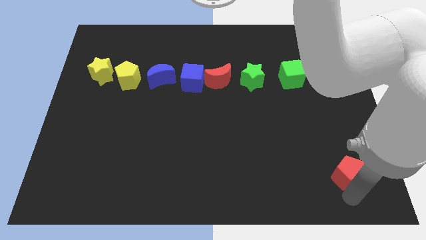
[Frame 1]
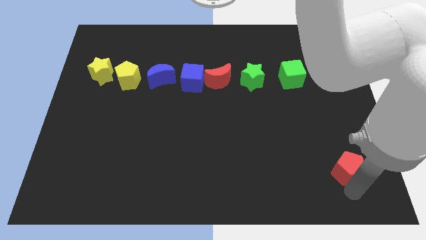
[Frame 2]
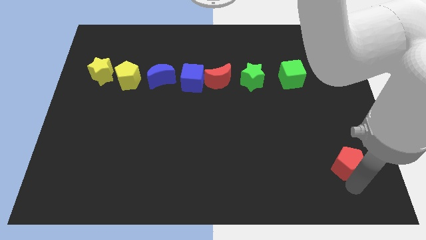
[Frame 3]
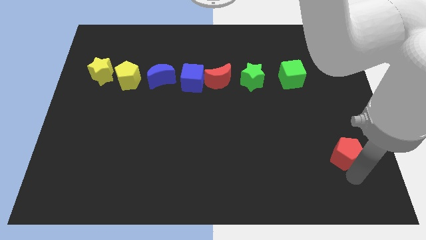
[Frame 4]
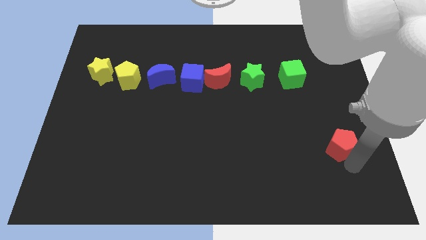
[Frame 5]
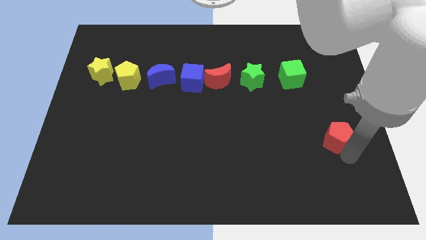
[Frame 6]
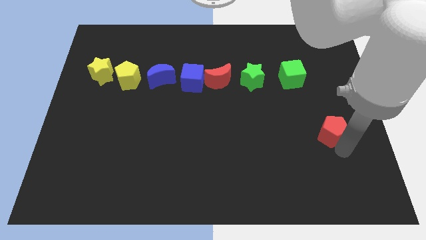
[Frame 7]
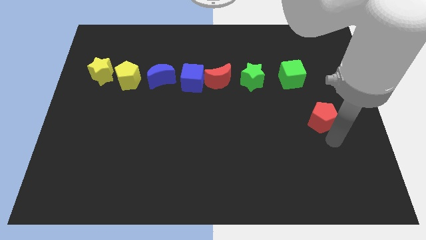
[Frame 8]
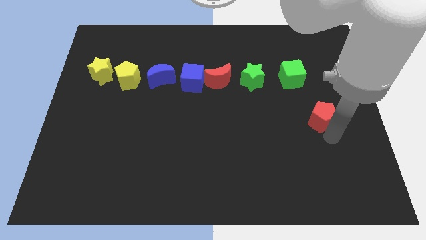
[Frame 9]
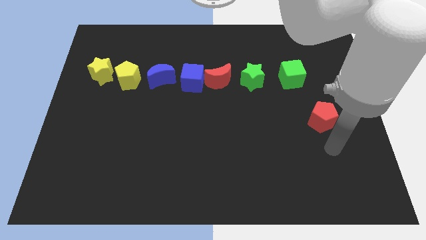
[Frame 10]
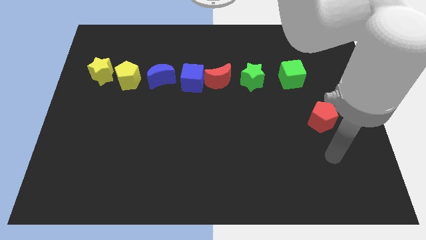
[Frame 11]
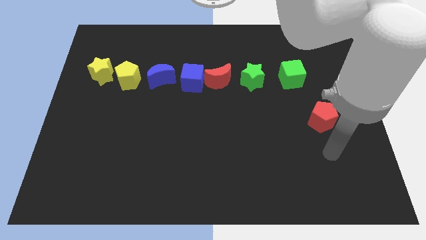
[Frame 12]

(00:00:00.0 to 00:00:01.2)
push the red pentagon to center right

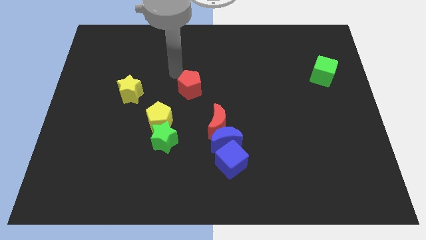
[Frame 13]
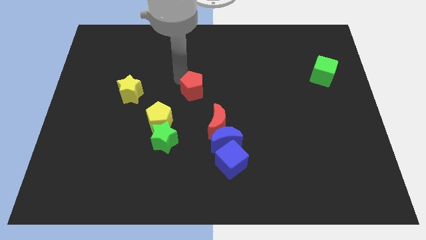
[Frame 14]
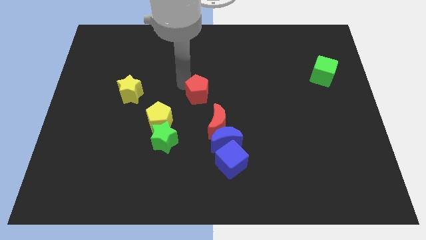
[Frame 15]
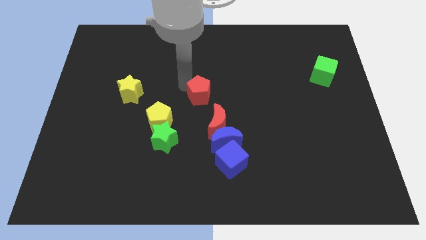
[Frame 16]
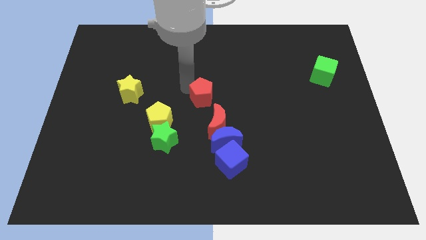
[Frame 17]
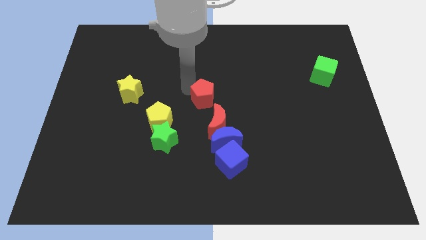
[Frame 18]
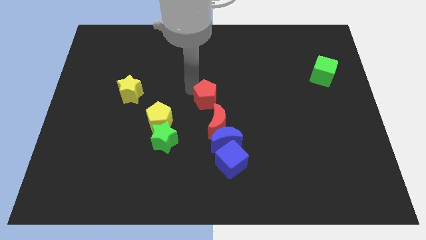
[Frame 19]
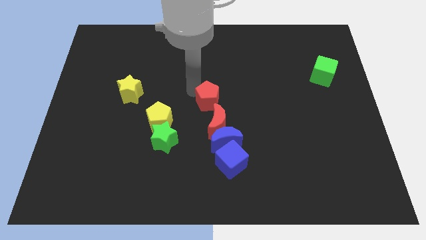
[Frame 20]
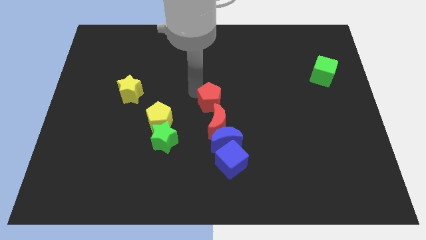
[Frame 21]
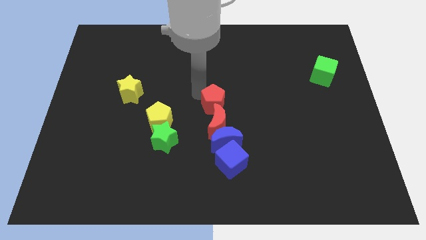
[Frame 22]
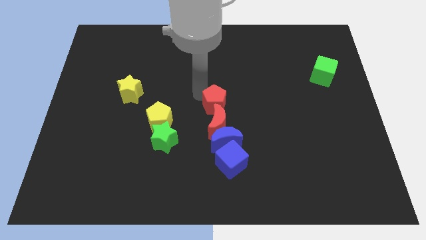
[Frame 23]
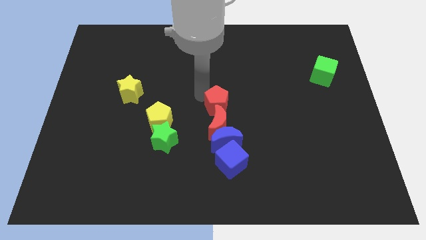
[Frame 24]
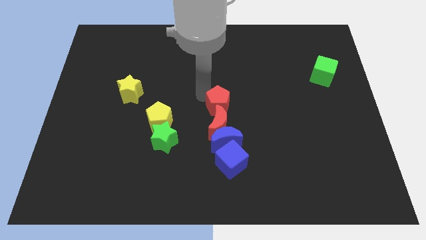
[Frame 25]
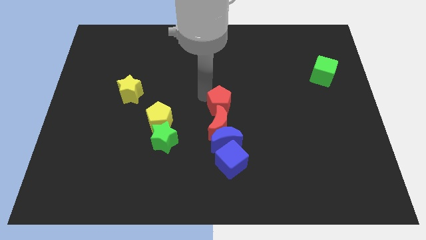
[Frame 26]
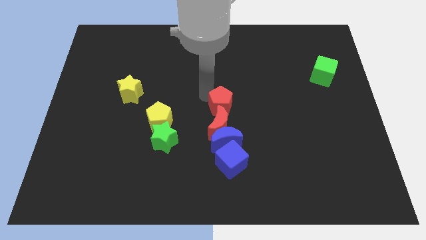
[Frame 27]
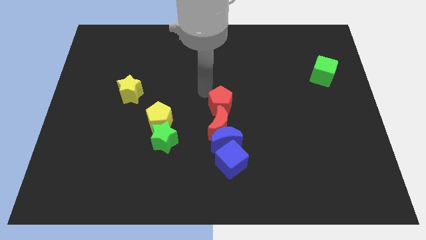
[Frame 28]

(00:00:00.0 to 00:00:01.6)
move the red pentagon to the top side of the red crescent

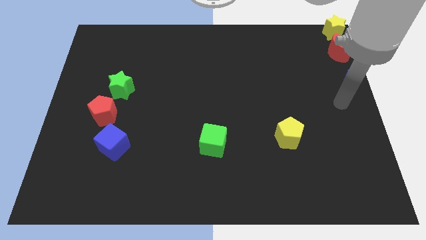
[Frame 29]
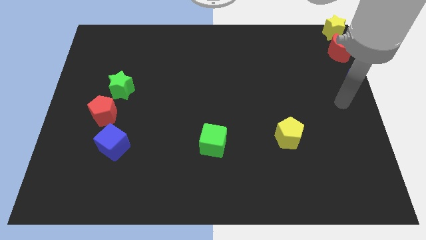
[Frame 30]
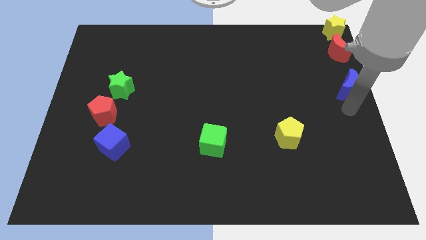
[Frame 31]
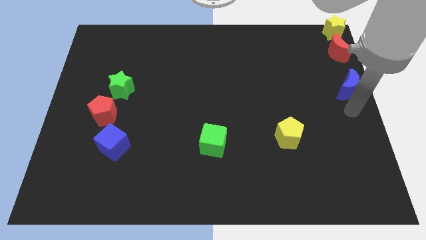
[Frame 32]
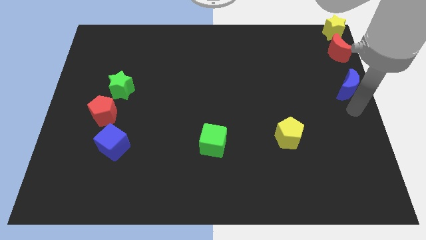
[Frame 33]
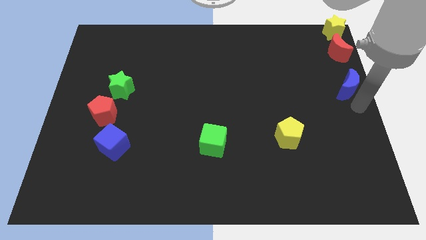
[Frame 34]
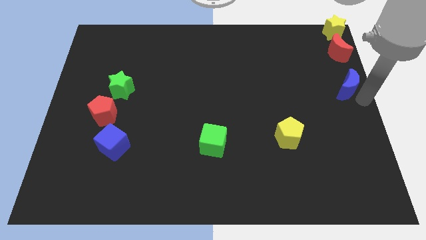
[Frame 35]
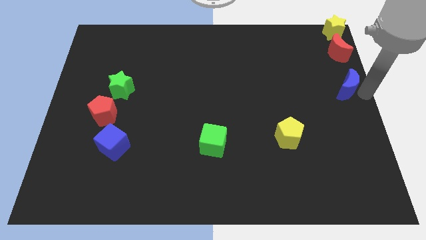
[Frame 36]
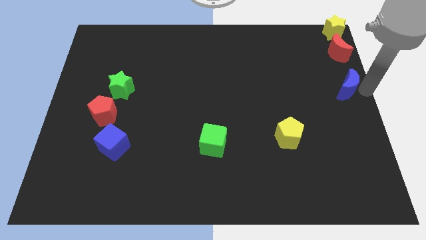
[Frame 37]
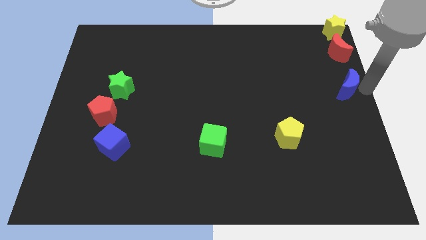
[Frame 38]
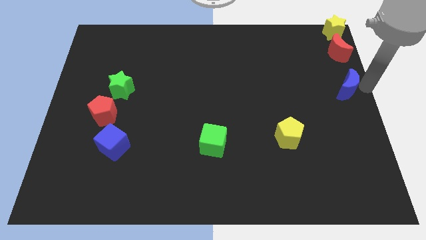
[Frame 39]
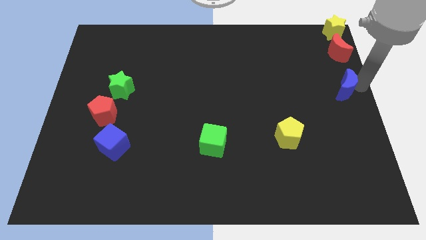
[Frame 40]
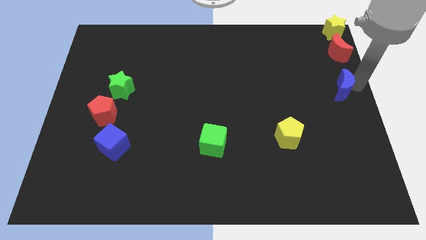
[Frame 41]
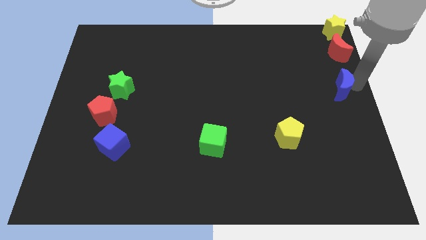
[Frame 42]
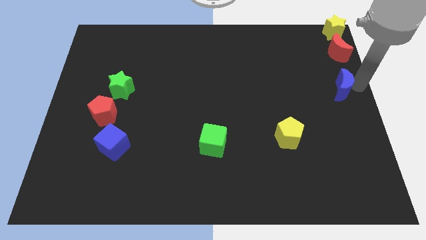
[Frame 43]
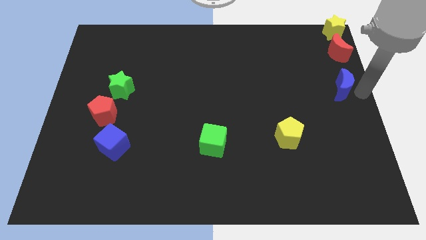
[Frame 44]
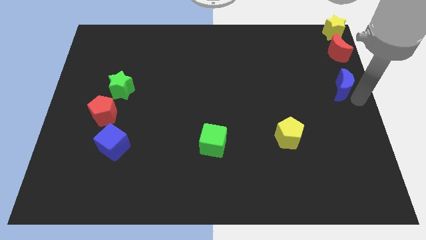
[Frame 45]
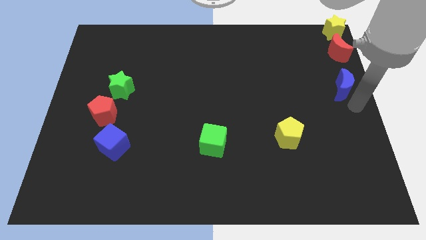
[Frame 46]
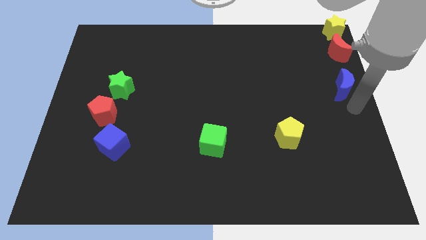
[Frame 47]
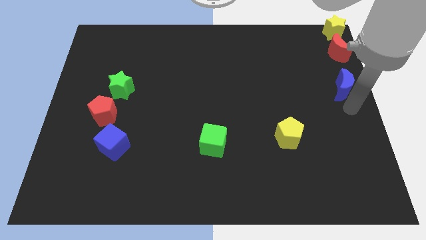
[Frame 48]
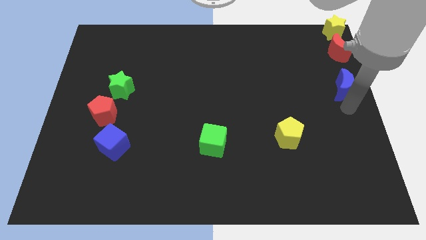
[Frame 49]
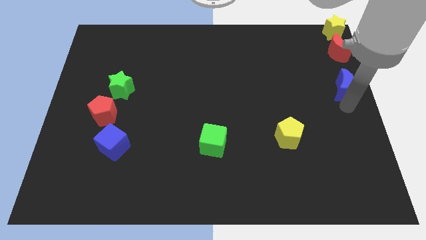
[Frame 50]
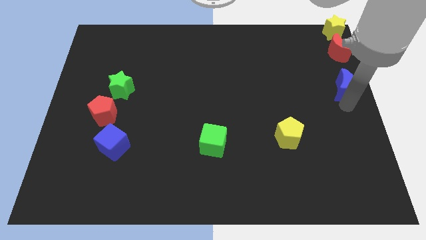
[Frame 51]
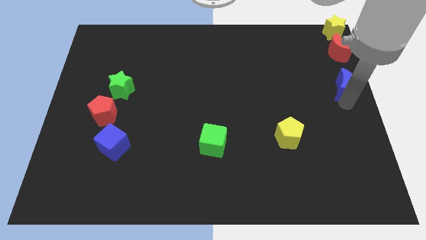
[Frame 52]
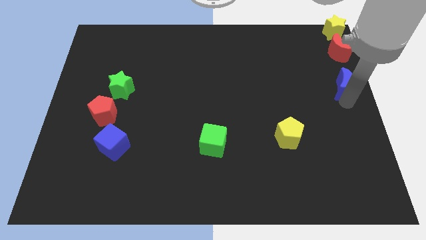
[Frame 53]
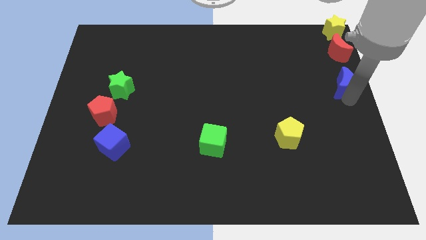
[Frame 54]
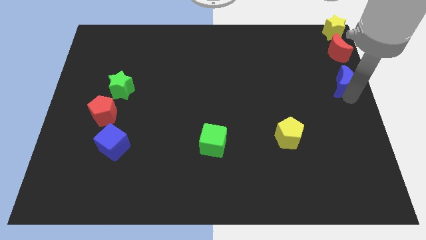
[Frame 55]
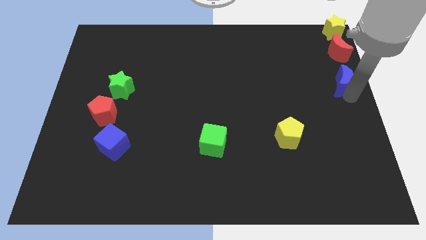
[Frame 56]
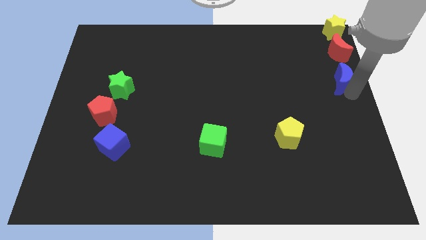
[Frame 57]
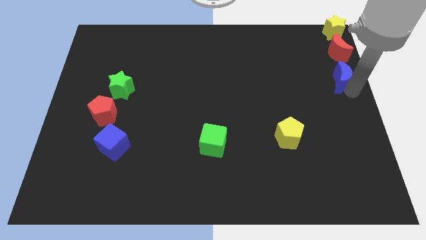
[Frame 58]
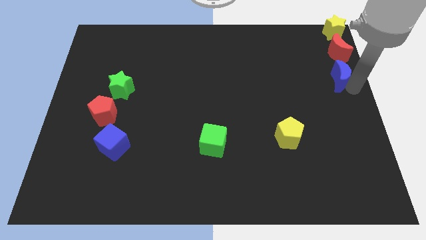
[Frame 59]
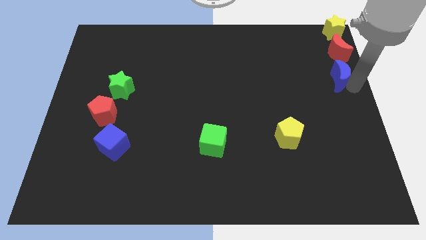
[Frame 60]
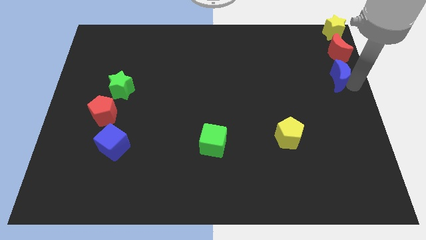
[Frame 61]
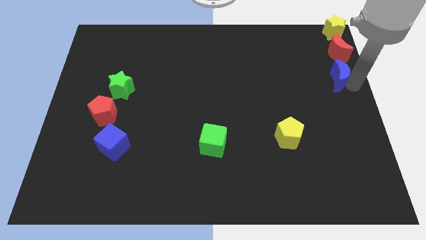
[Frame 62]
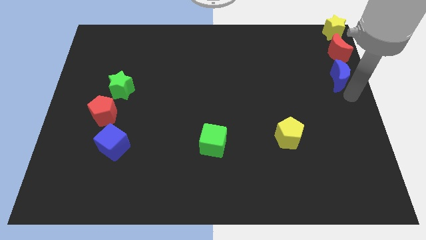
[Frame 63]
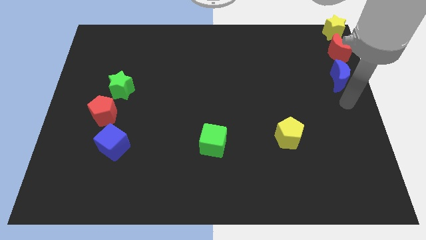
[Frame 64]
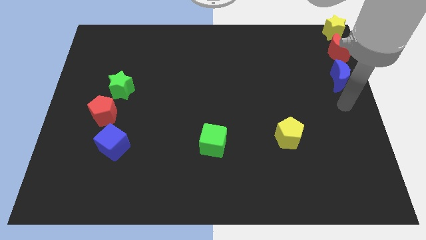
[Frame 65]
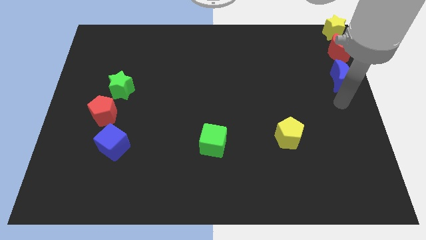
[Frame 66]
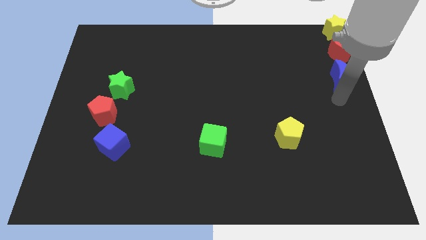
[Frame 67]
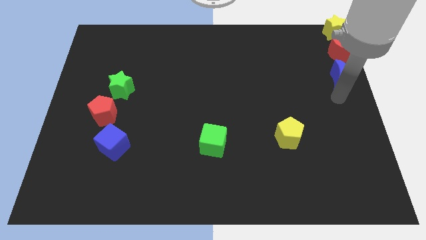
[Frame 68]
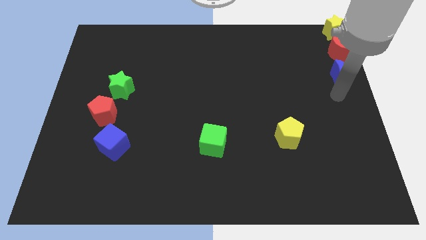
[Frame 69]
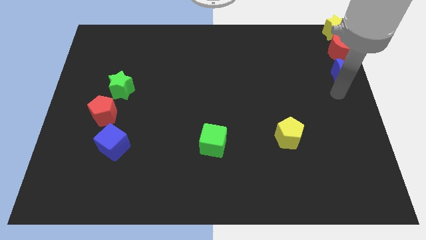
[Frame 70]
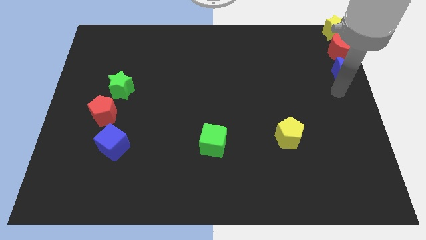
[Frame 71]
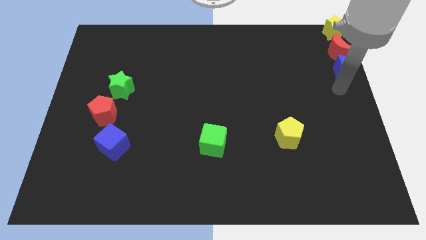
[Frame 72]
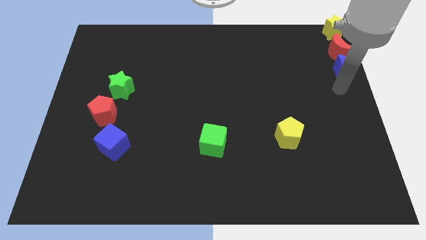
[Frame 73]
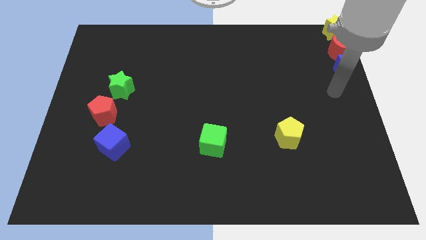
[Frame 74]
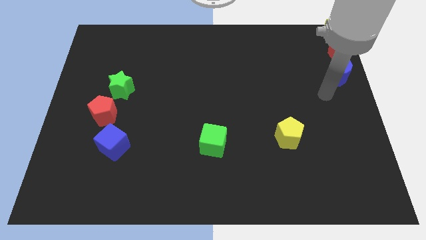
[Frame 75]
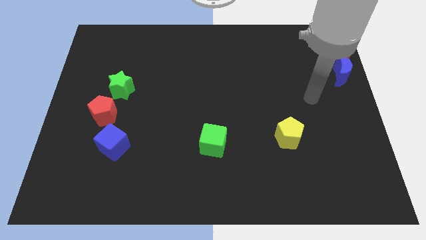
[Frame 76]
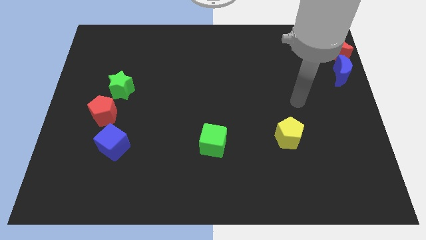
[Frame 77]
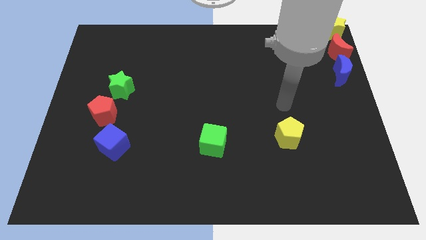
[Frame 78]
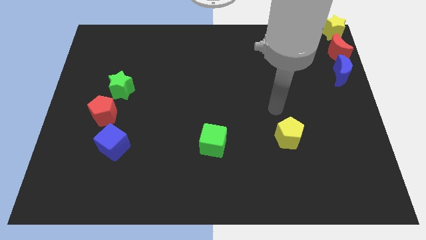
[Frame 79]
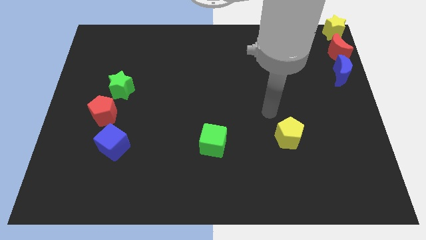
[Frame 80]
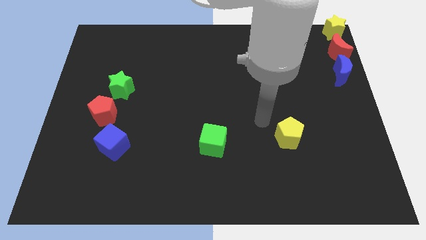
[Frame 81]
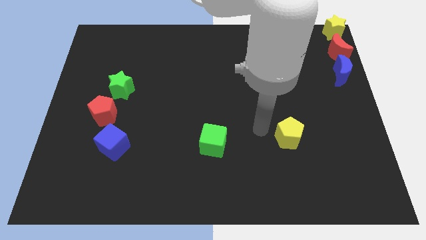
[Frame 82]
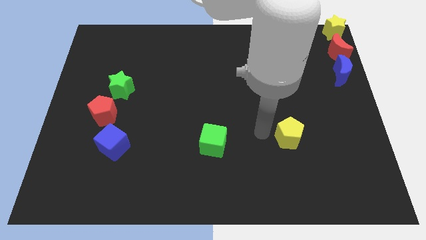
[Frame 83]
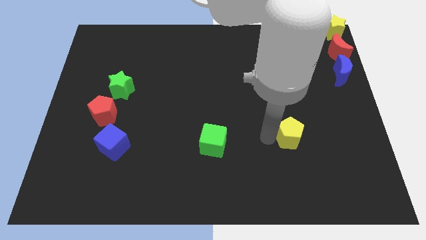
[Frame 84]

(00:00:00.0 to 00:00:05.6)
attach the blue moon to the red moon

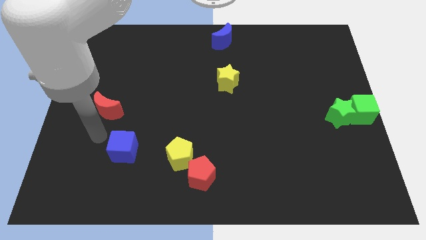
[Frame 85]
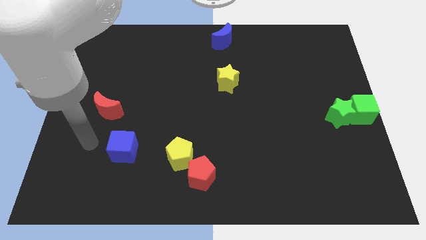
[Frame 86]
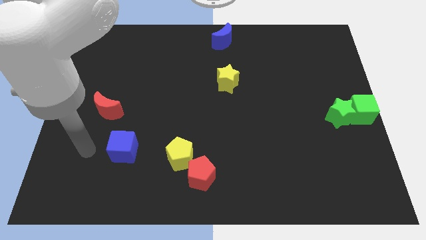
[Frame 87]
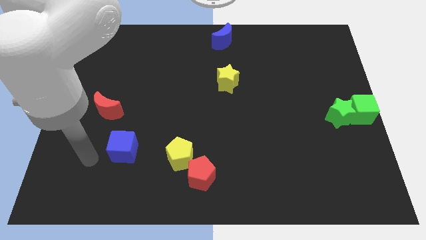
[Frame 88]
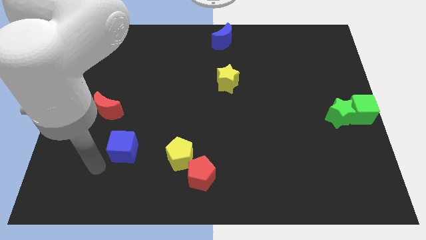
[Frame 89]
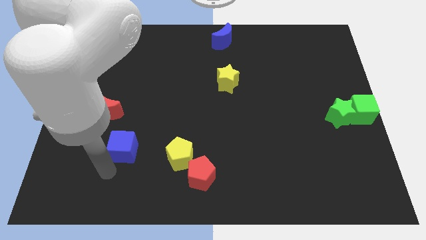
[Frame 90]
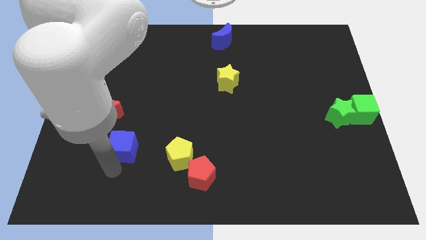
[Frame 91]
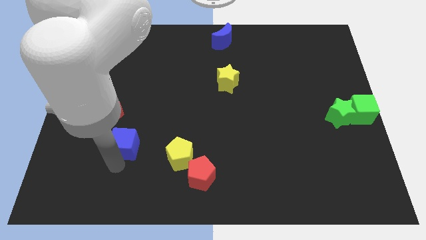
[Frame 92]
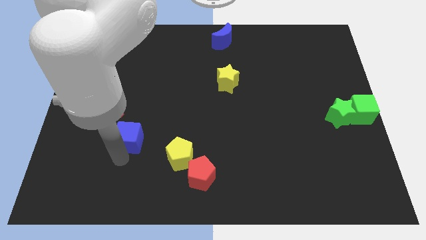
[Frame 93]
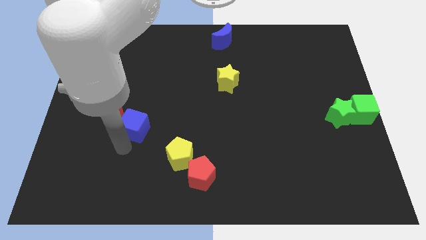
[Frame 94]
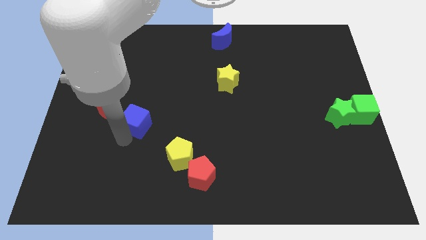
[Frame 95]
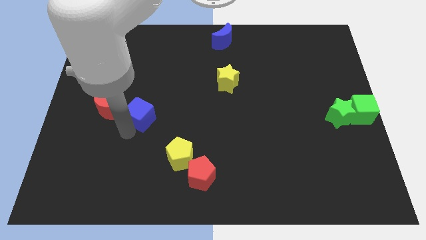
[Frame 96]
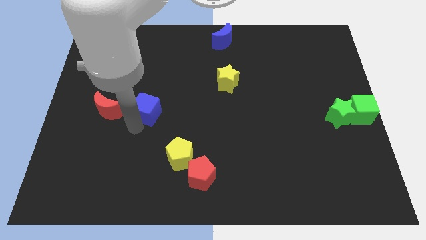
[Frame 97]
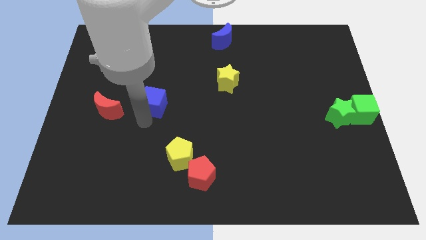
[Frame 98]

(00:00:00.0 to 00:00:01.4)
place the blue cube at the right side of the red crescent
